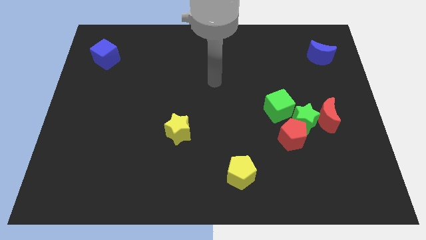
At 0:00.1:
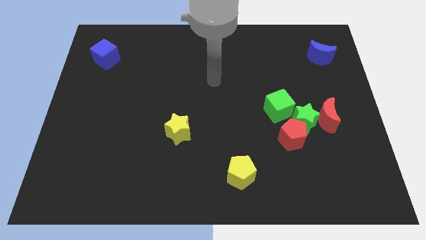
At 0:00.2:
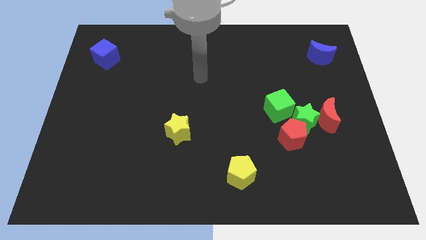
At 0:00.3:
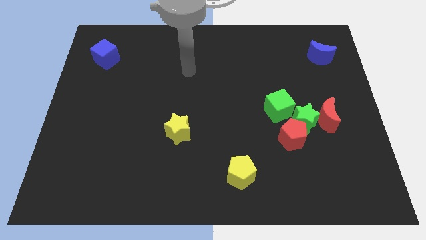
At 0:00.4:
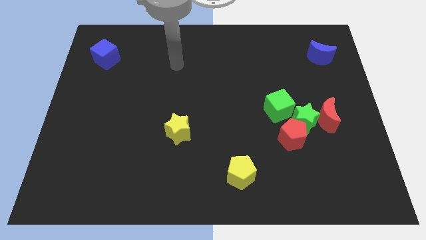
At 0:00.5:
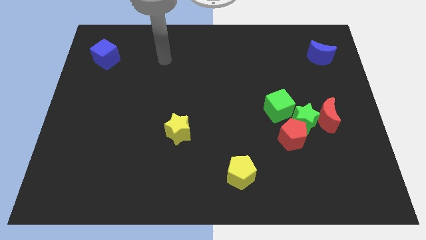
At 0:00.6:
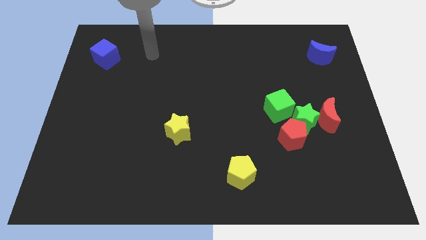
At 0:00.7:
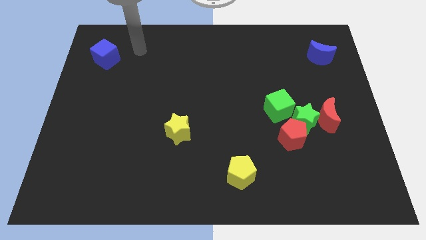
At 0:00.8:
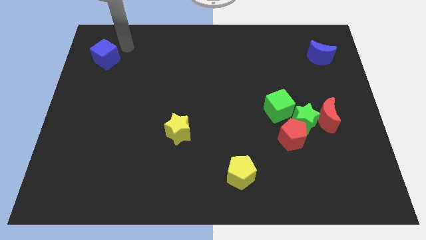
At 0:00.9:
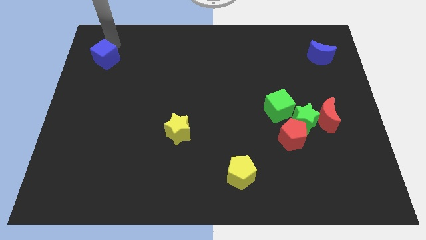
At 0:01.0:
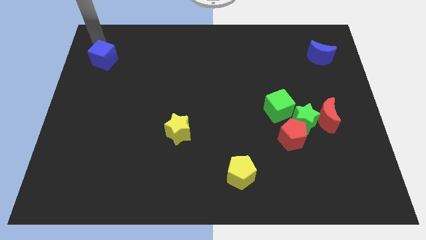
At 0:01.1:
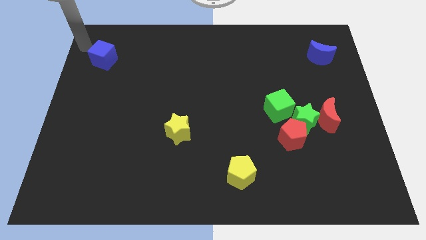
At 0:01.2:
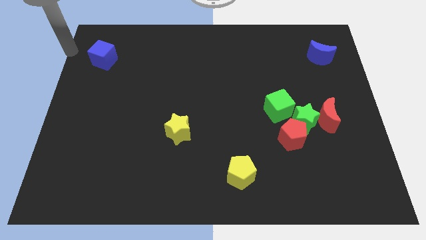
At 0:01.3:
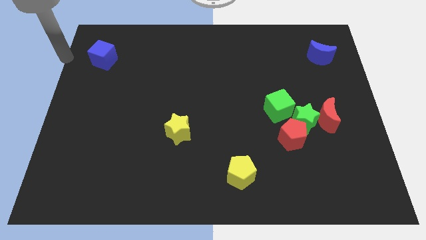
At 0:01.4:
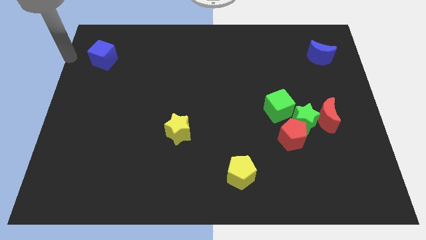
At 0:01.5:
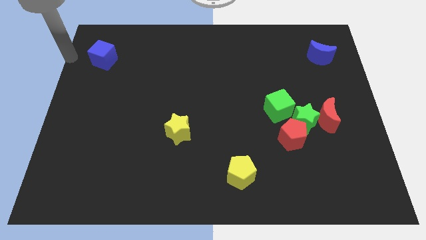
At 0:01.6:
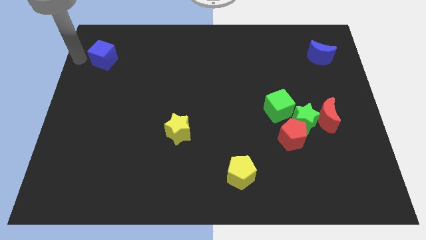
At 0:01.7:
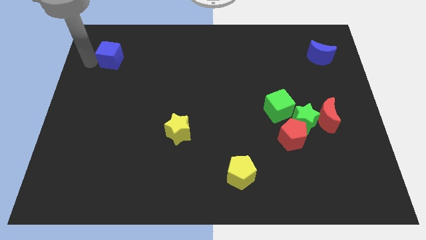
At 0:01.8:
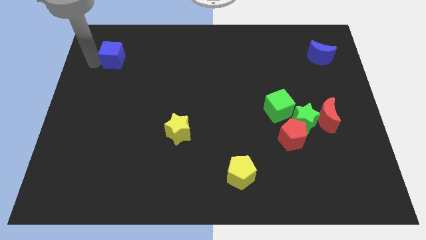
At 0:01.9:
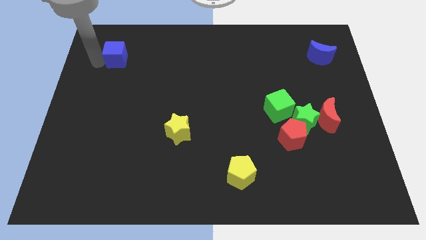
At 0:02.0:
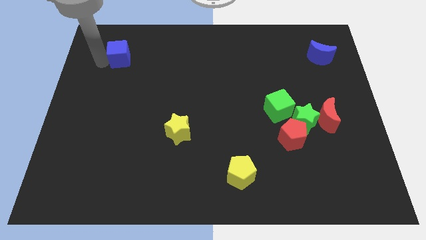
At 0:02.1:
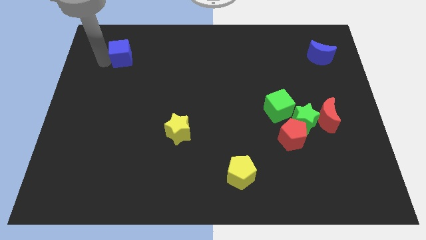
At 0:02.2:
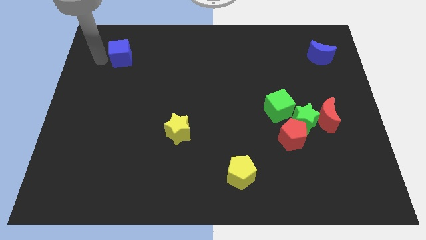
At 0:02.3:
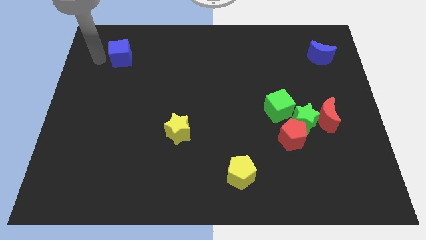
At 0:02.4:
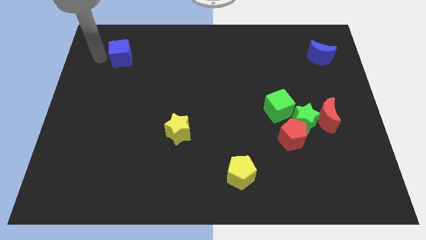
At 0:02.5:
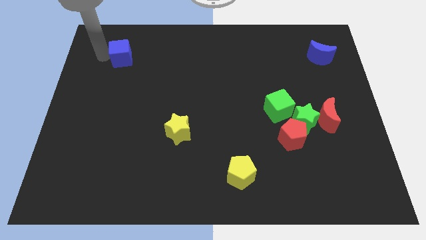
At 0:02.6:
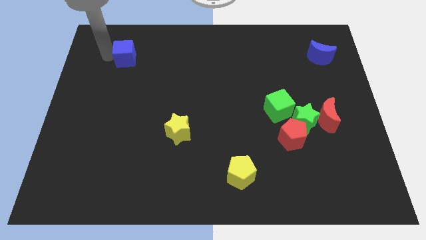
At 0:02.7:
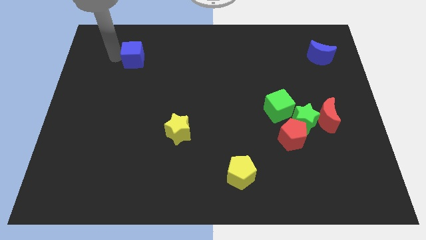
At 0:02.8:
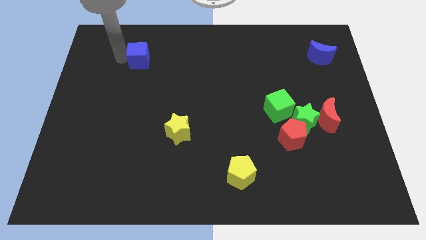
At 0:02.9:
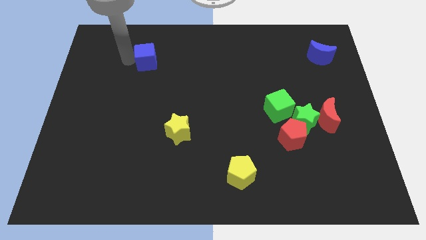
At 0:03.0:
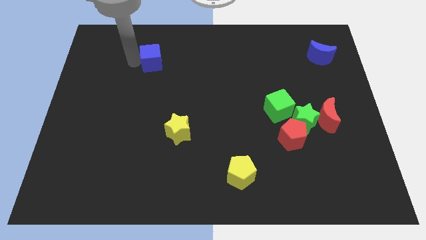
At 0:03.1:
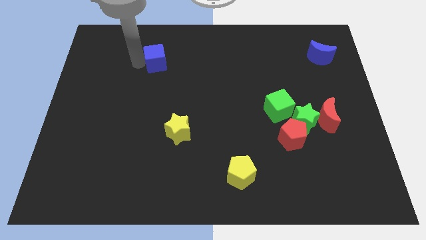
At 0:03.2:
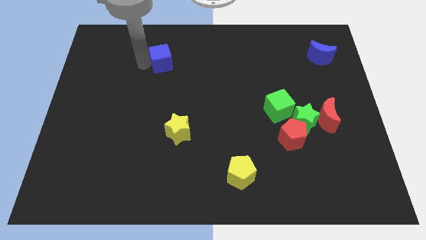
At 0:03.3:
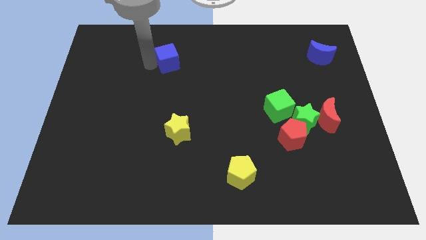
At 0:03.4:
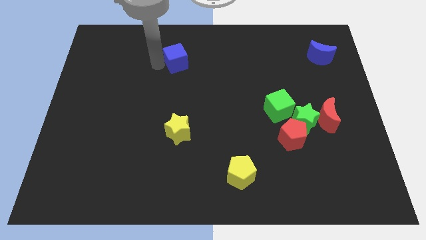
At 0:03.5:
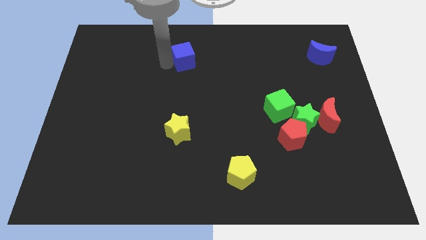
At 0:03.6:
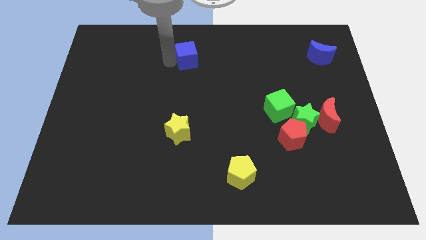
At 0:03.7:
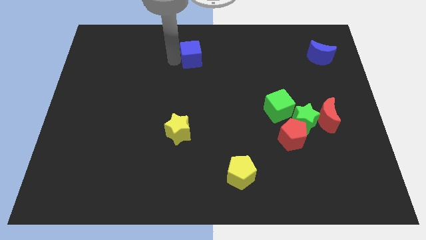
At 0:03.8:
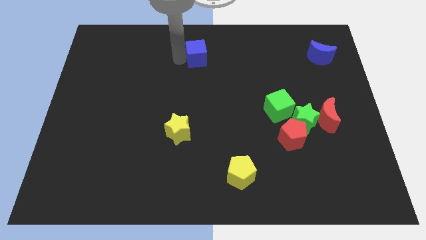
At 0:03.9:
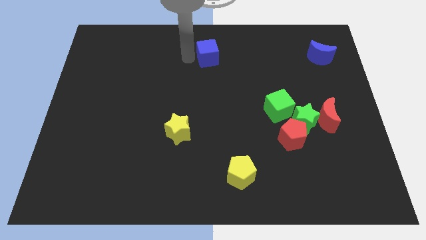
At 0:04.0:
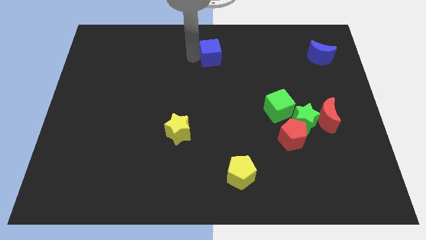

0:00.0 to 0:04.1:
push the blue cube to the right

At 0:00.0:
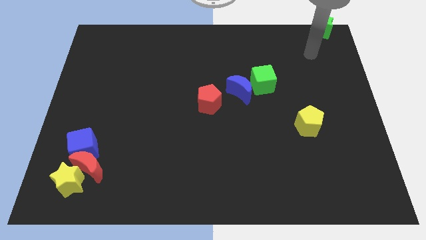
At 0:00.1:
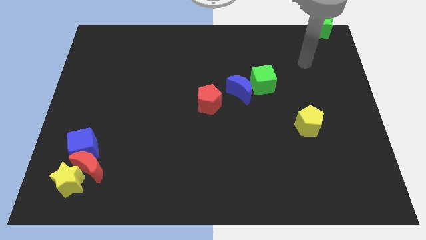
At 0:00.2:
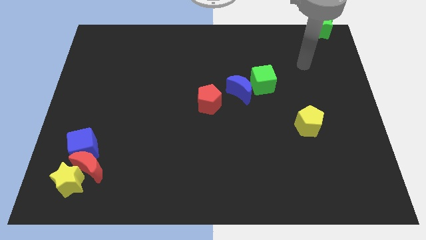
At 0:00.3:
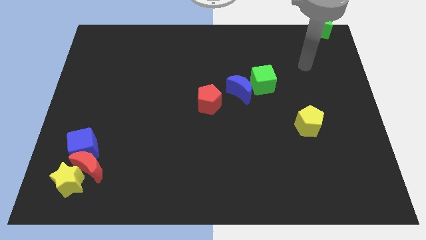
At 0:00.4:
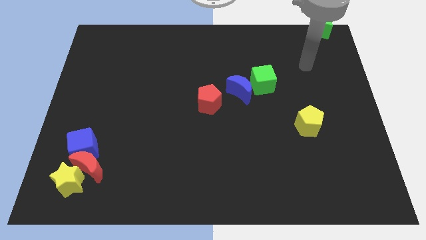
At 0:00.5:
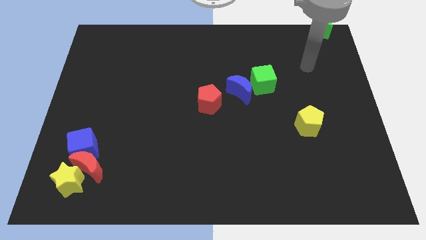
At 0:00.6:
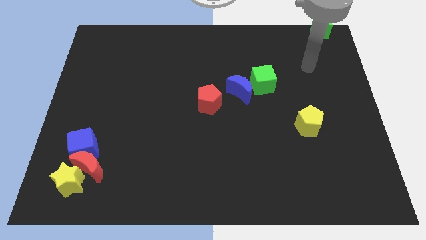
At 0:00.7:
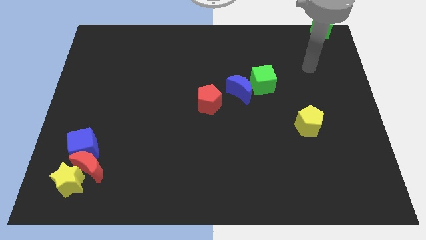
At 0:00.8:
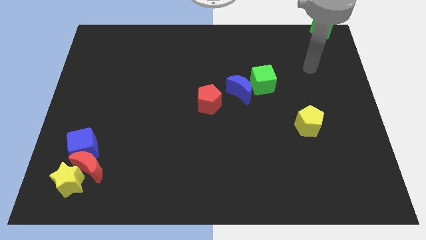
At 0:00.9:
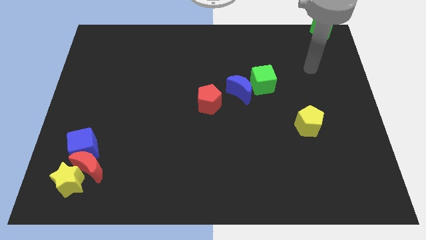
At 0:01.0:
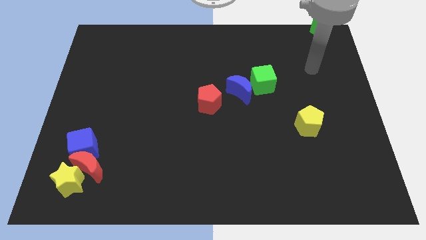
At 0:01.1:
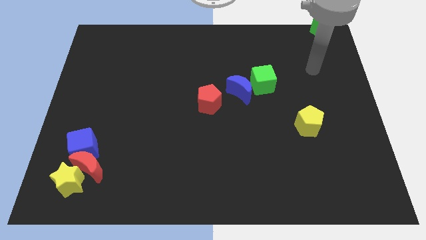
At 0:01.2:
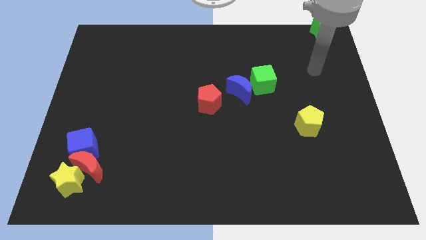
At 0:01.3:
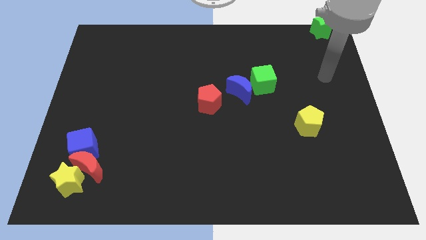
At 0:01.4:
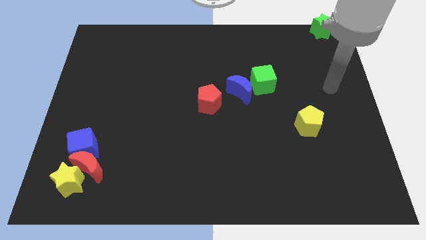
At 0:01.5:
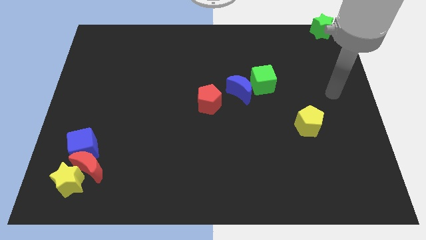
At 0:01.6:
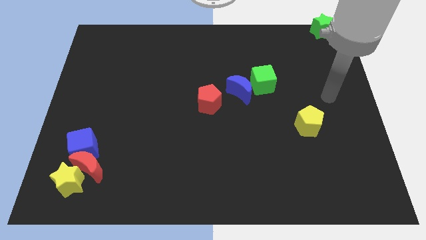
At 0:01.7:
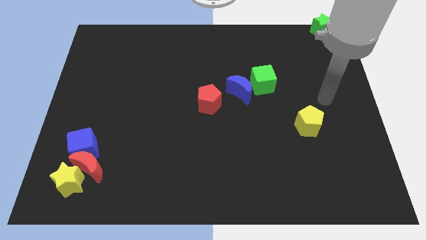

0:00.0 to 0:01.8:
point your arm at the top right of the yellow pentagon

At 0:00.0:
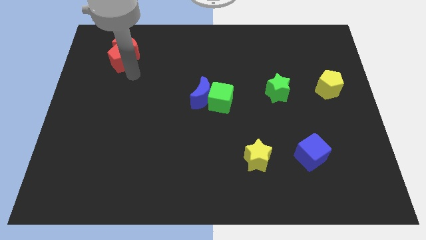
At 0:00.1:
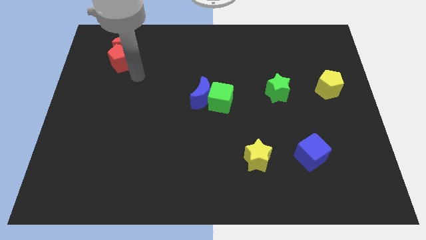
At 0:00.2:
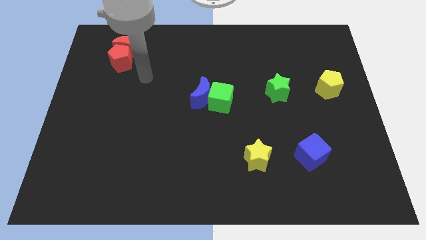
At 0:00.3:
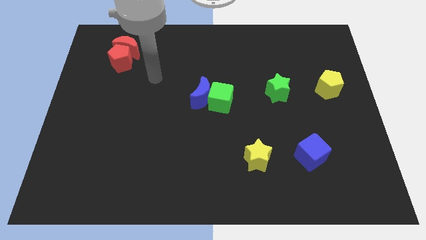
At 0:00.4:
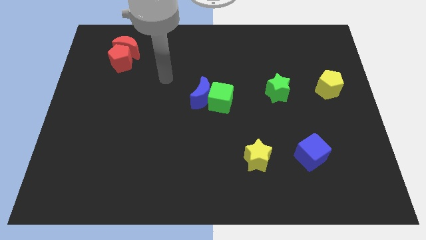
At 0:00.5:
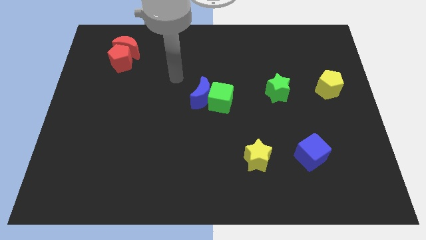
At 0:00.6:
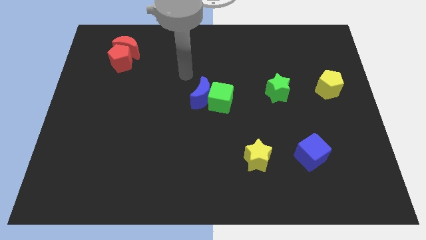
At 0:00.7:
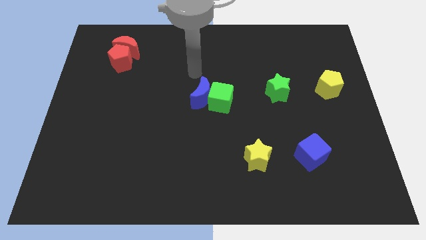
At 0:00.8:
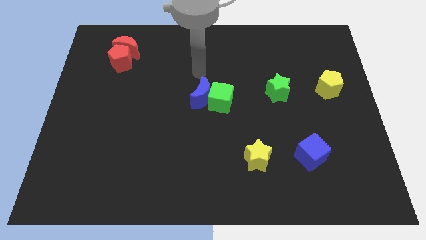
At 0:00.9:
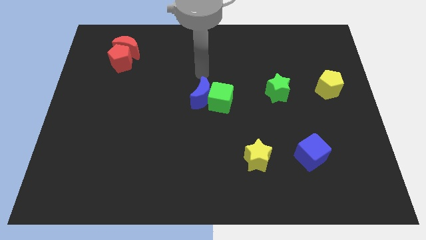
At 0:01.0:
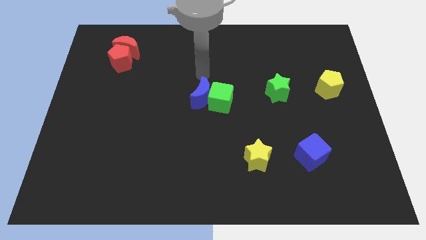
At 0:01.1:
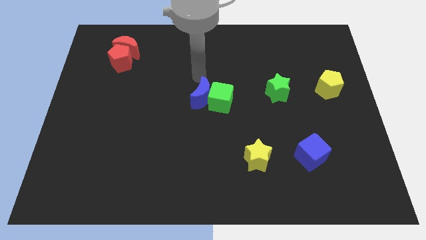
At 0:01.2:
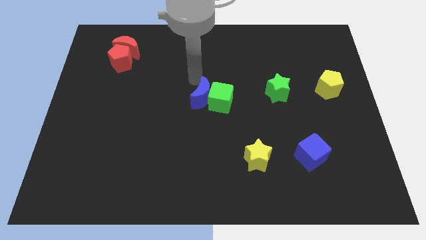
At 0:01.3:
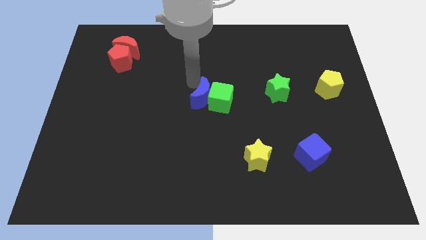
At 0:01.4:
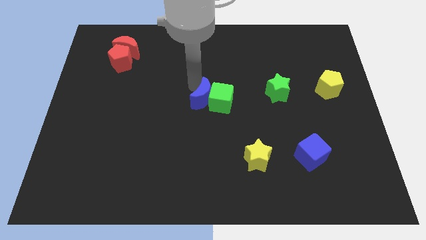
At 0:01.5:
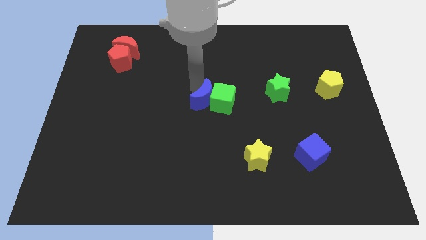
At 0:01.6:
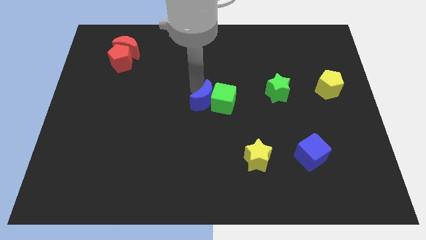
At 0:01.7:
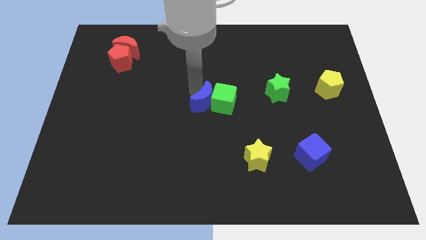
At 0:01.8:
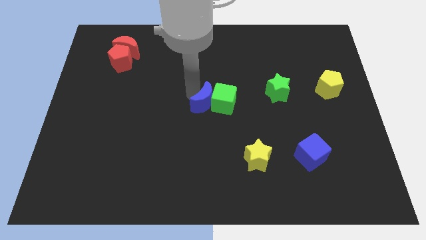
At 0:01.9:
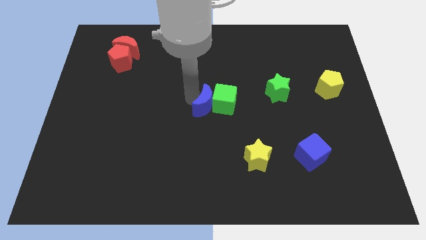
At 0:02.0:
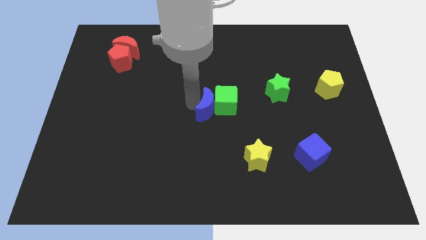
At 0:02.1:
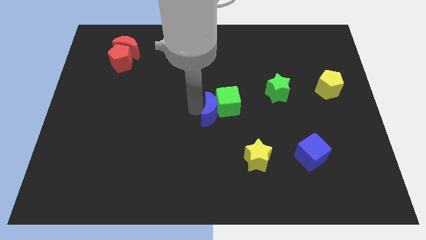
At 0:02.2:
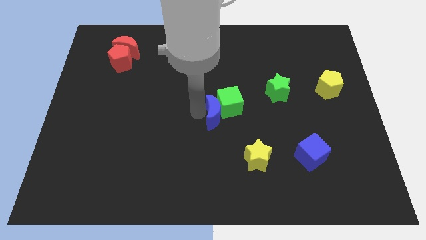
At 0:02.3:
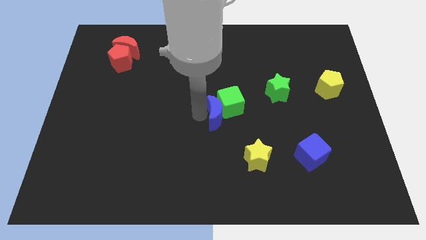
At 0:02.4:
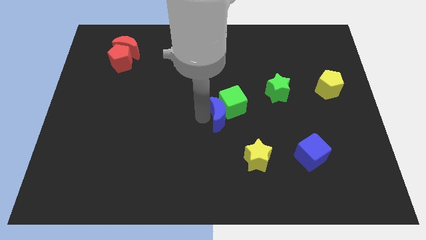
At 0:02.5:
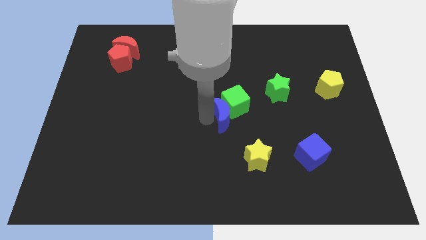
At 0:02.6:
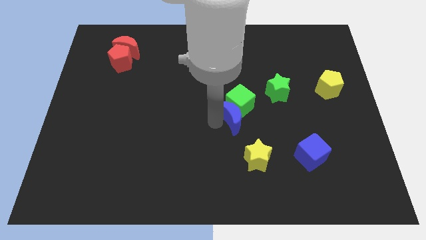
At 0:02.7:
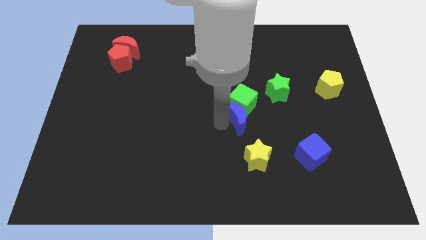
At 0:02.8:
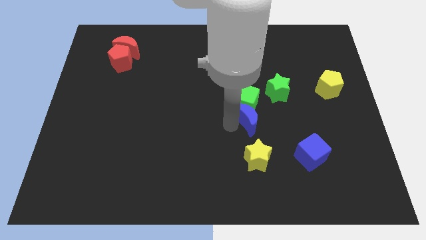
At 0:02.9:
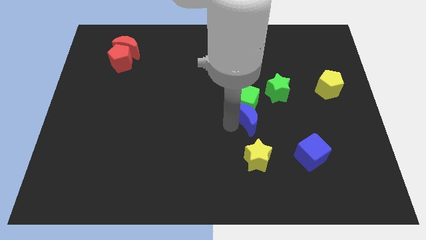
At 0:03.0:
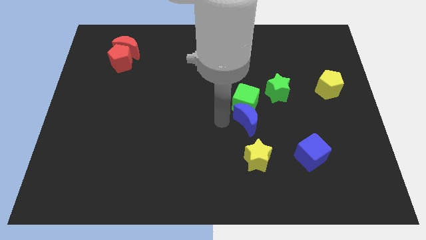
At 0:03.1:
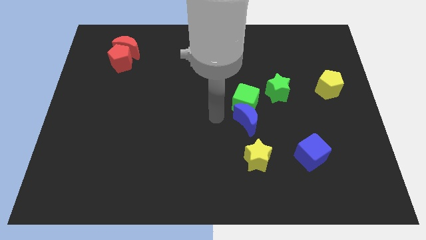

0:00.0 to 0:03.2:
push the blue moon into the green cube
